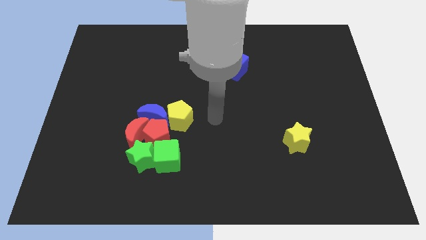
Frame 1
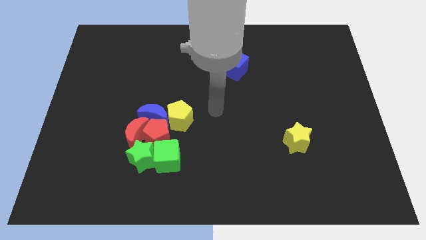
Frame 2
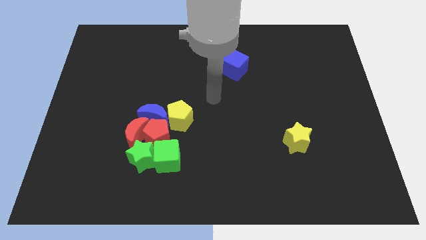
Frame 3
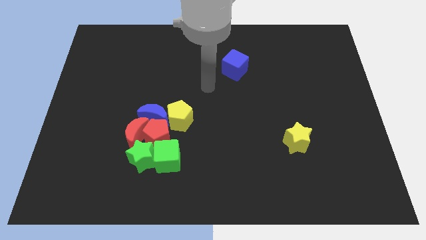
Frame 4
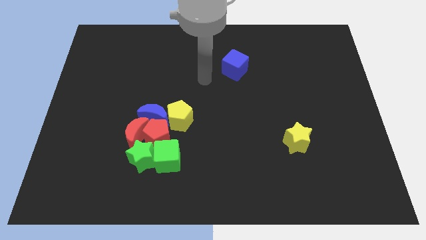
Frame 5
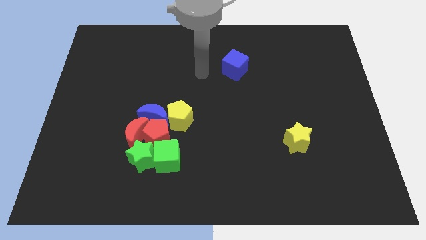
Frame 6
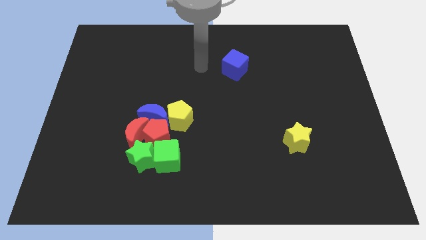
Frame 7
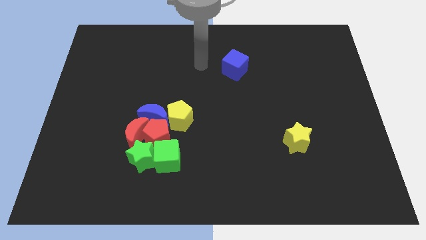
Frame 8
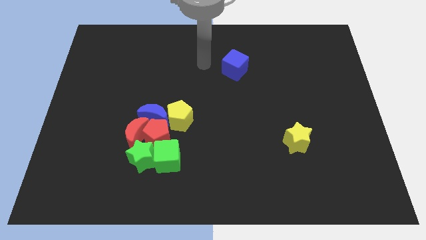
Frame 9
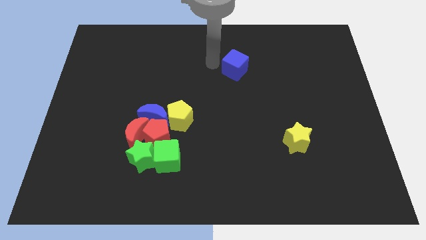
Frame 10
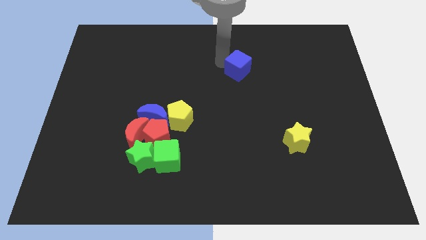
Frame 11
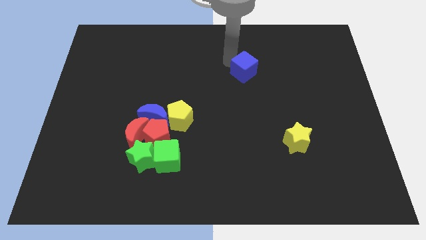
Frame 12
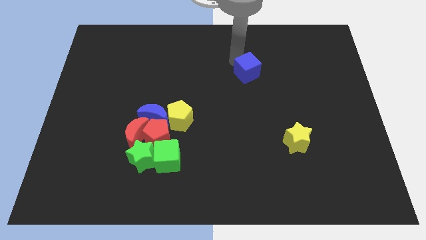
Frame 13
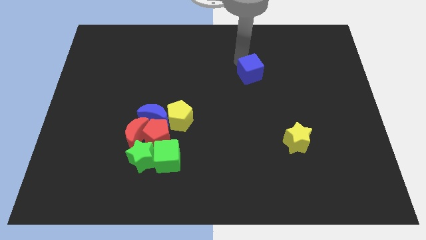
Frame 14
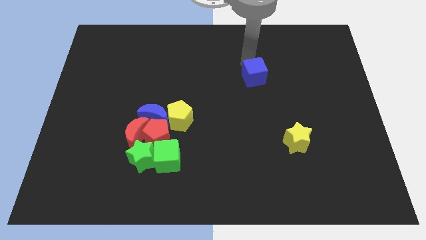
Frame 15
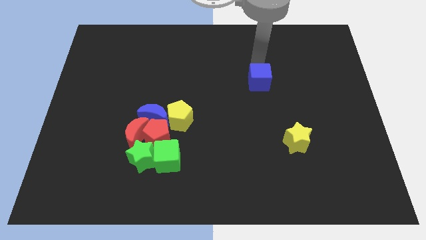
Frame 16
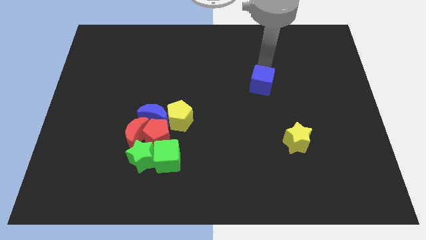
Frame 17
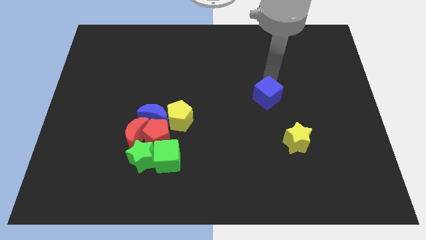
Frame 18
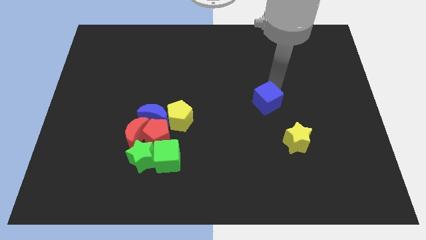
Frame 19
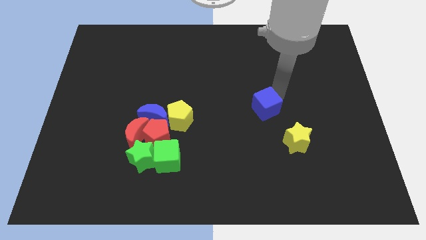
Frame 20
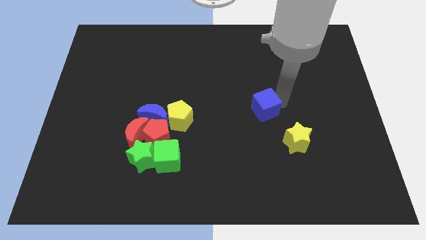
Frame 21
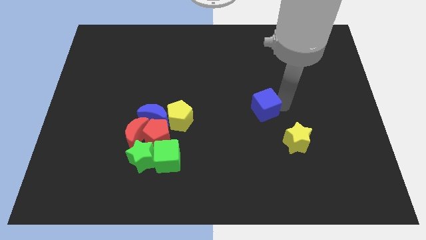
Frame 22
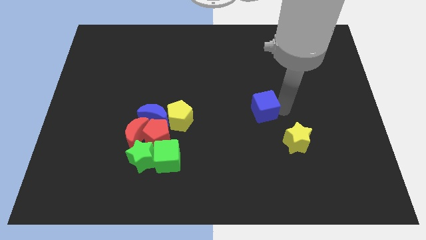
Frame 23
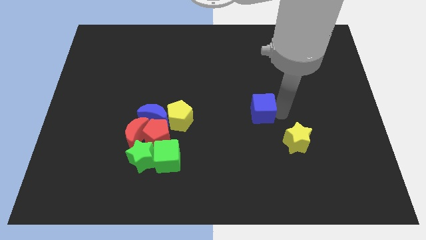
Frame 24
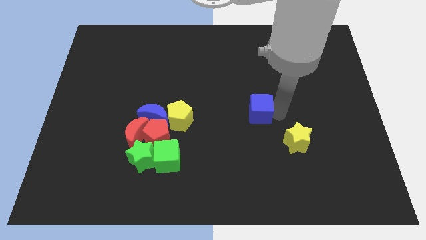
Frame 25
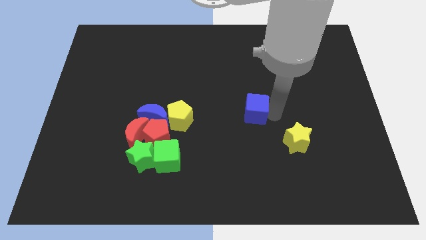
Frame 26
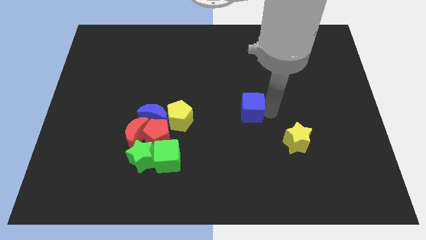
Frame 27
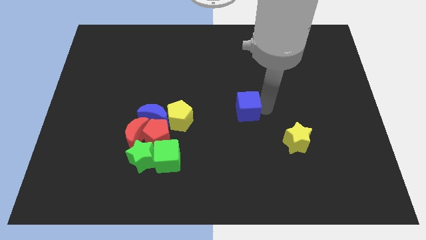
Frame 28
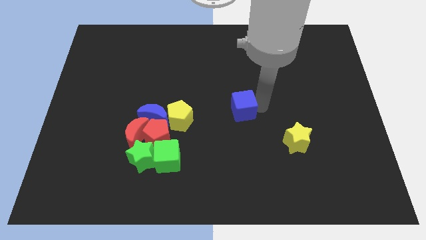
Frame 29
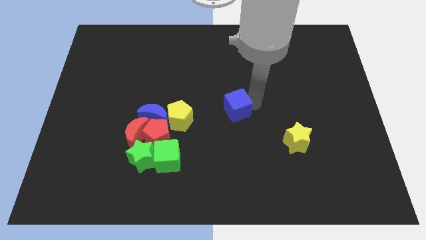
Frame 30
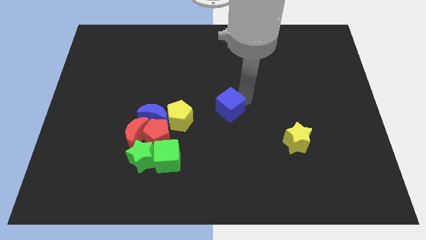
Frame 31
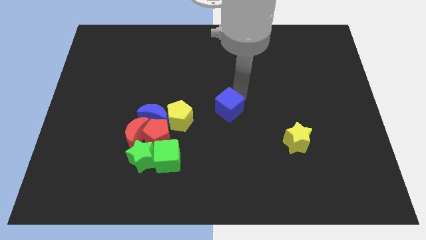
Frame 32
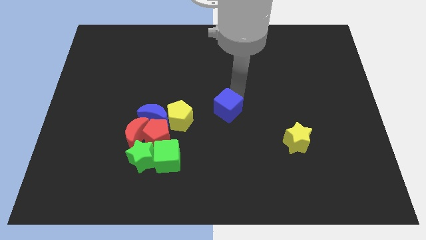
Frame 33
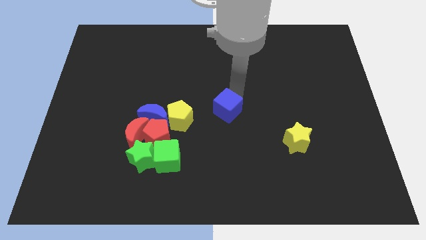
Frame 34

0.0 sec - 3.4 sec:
move the blue cube to the center of the board

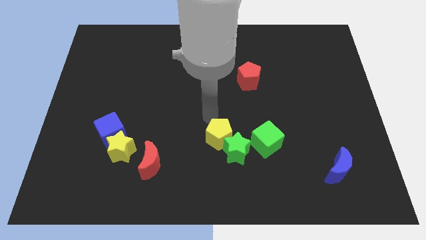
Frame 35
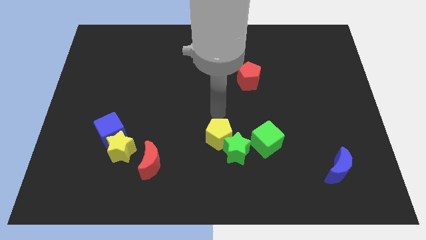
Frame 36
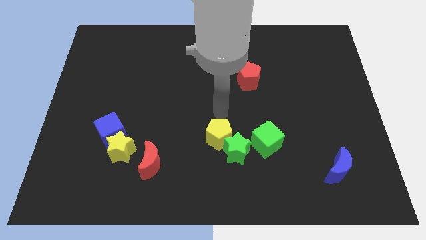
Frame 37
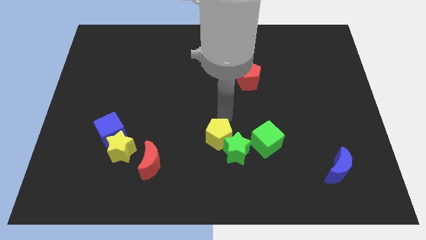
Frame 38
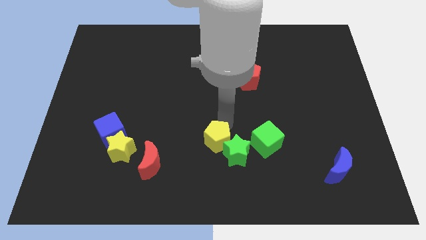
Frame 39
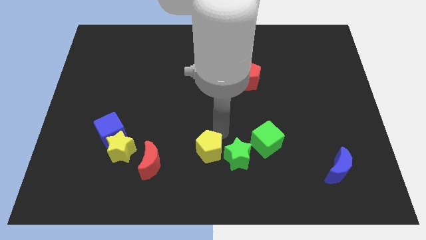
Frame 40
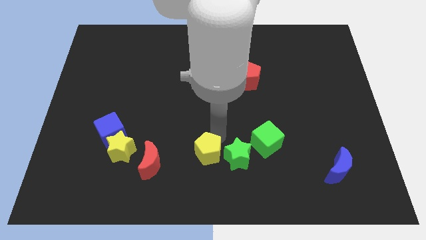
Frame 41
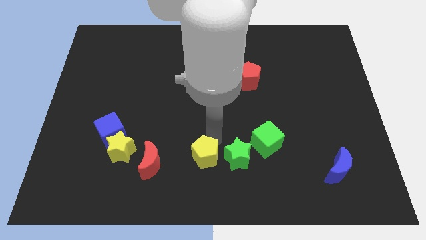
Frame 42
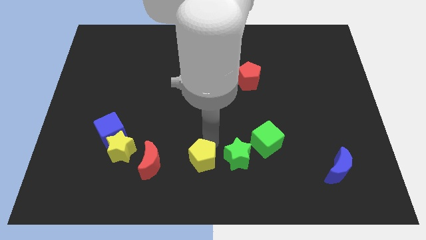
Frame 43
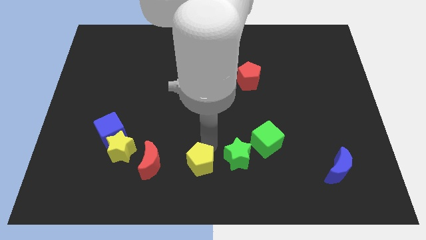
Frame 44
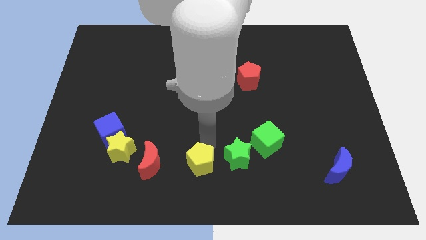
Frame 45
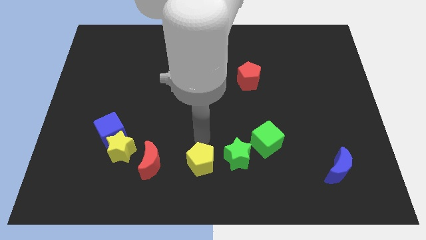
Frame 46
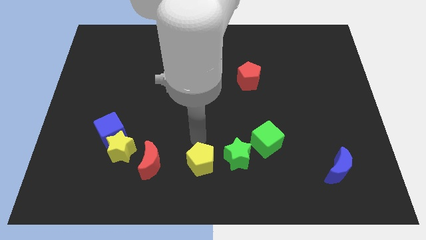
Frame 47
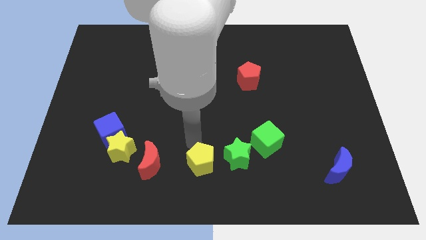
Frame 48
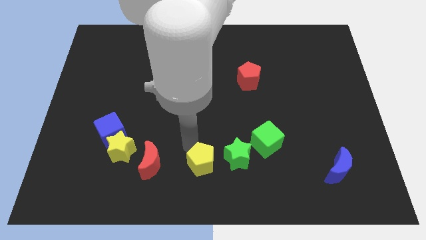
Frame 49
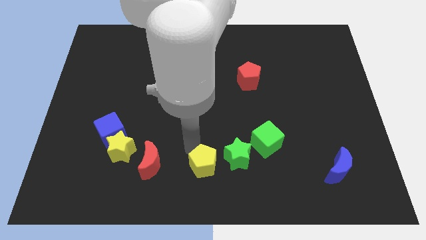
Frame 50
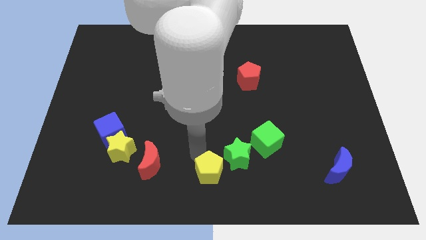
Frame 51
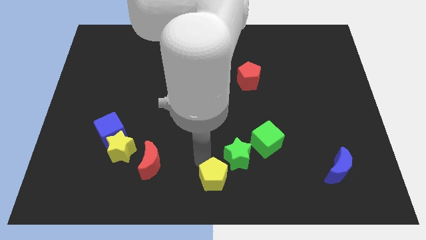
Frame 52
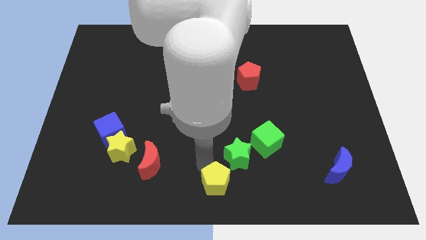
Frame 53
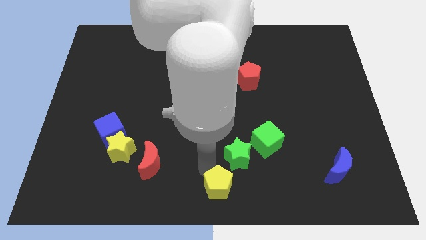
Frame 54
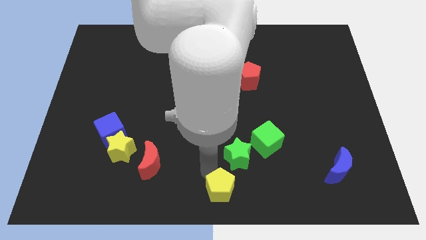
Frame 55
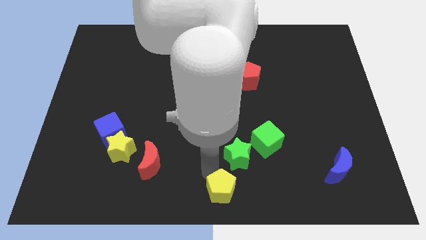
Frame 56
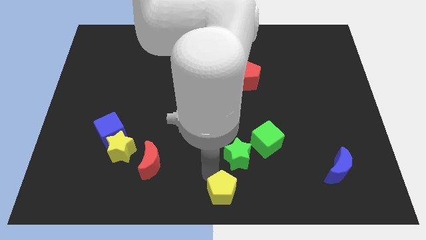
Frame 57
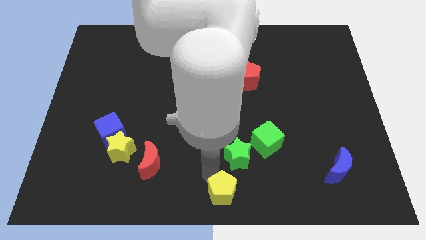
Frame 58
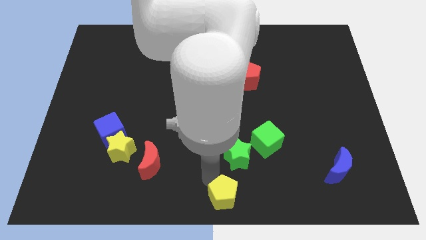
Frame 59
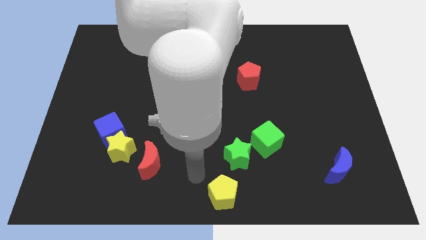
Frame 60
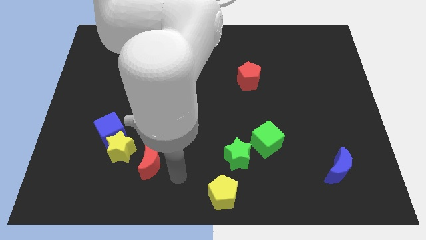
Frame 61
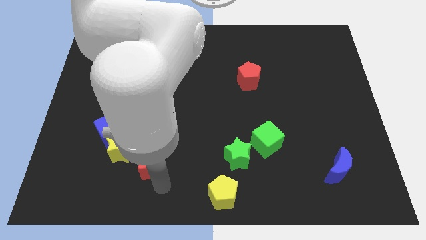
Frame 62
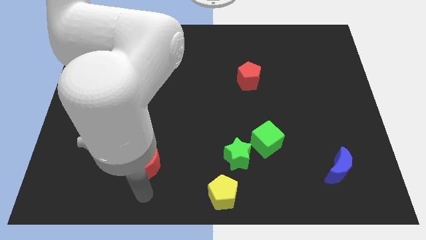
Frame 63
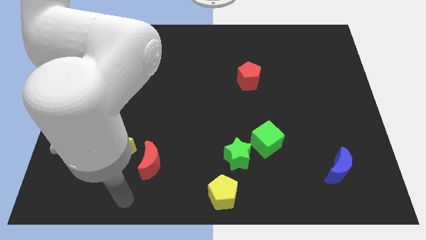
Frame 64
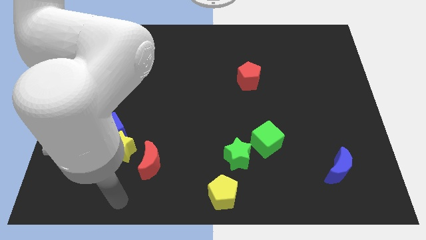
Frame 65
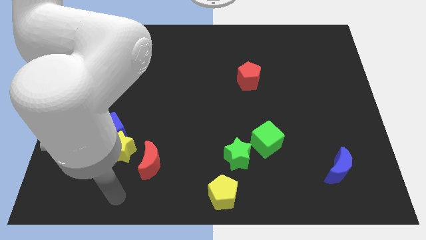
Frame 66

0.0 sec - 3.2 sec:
move the yellow pentagon to the bottom center of the board

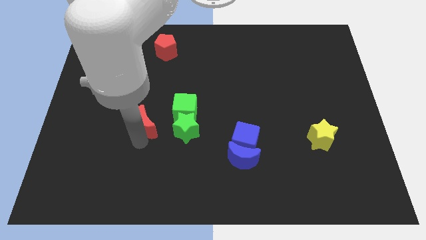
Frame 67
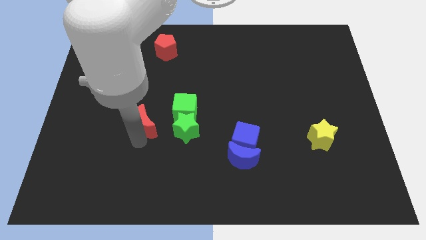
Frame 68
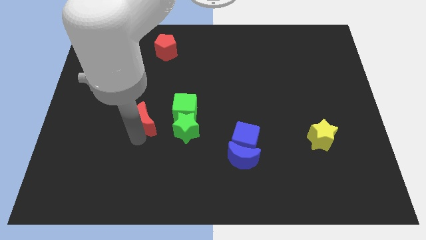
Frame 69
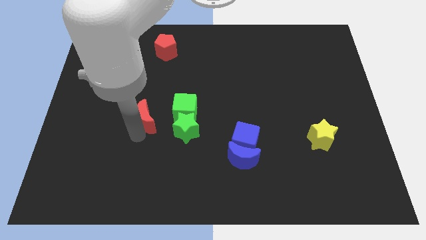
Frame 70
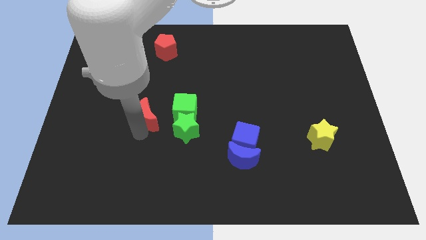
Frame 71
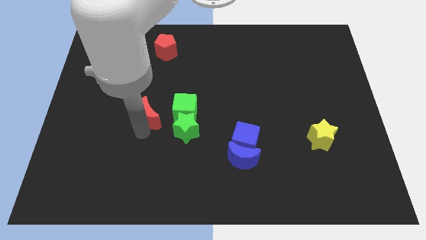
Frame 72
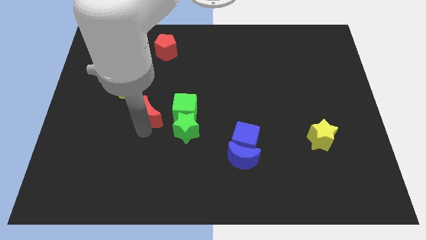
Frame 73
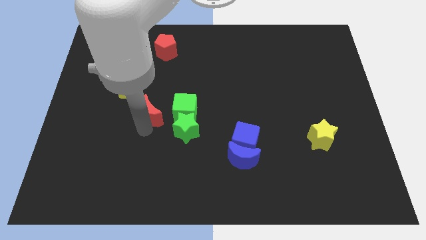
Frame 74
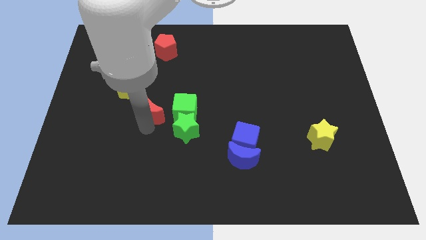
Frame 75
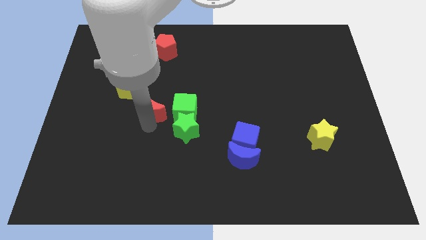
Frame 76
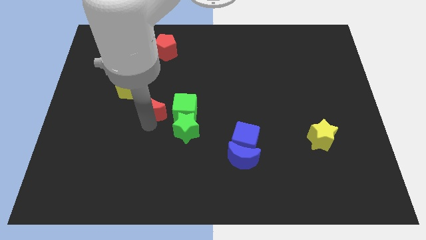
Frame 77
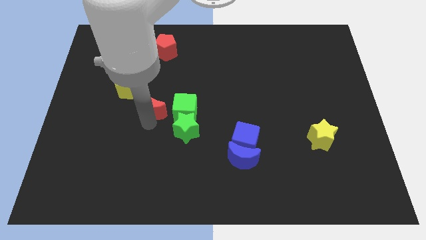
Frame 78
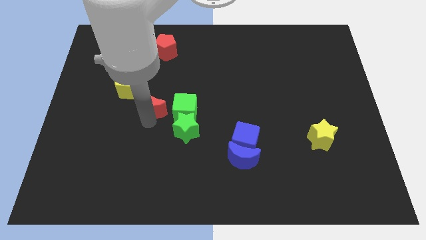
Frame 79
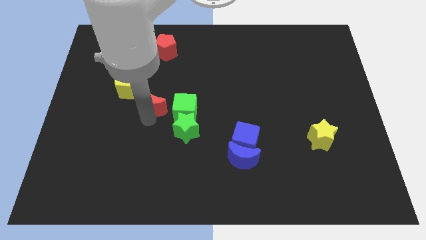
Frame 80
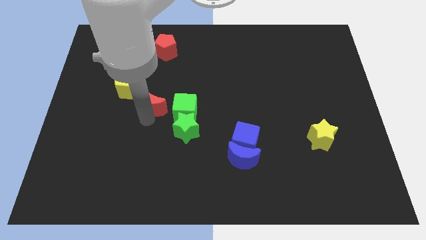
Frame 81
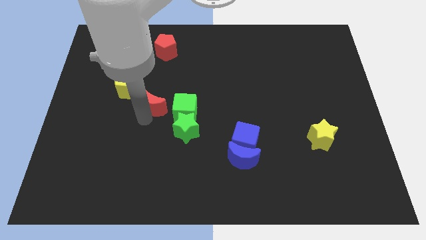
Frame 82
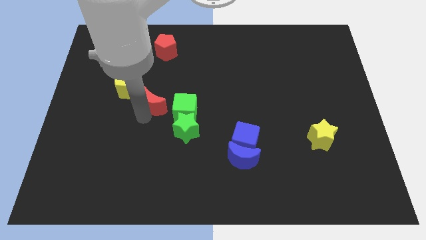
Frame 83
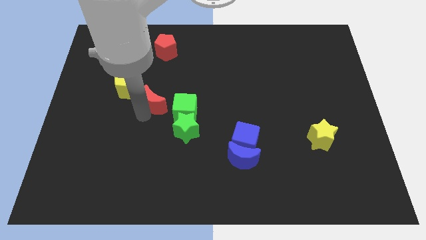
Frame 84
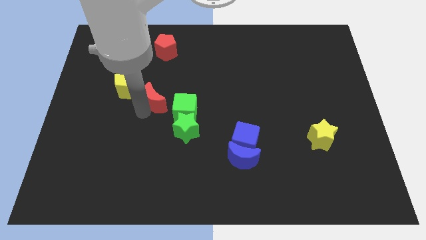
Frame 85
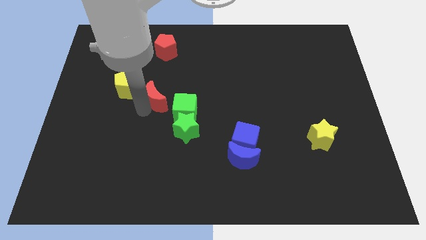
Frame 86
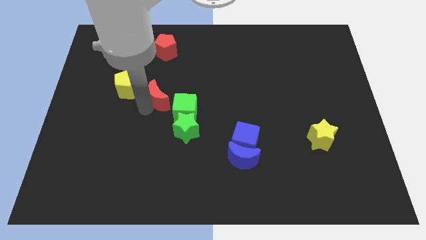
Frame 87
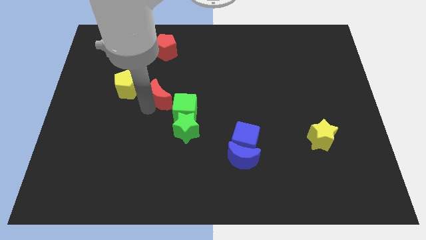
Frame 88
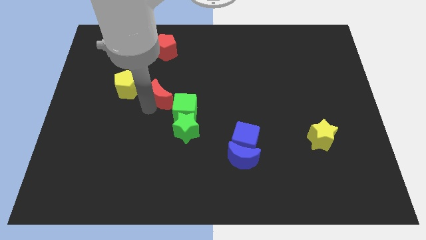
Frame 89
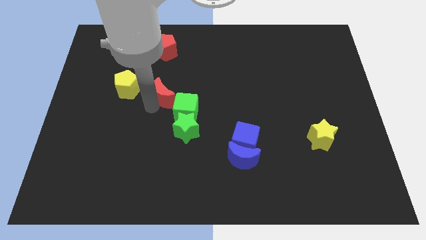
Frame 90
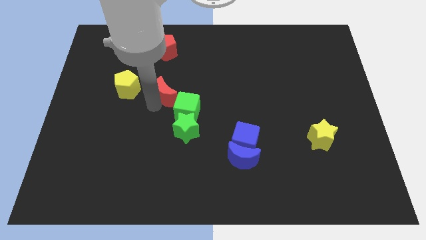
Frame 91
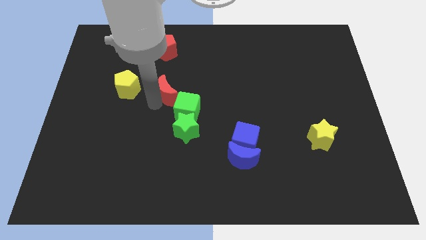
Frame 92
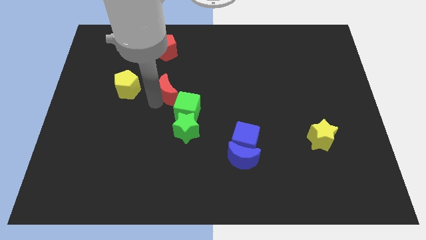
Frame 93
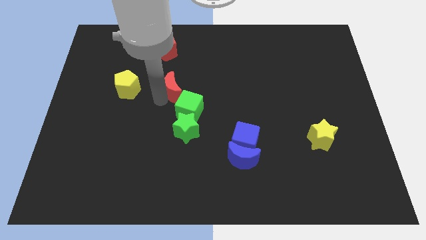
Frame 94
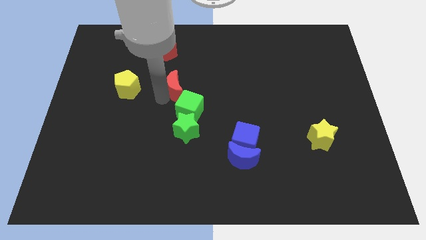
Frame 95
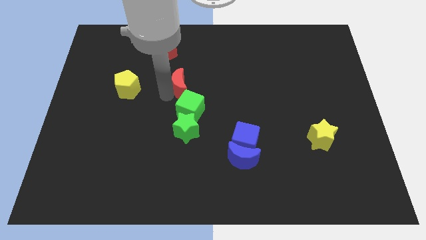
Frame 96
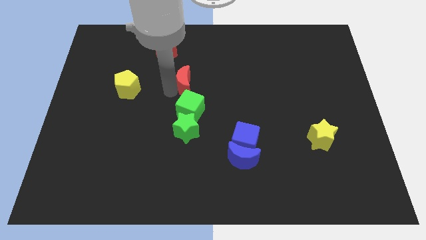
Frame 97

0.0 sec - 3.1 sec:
place the red moon diagonally bottom right to the red pentagon
